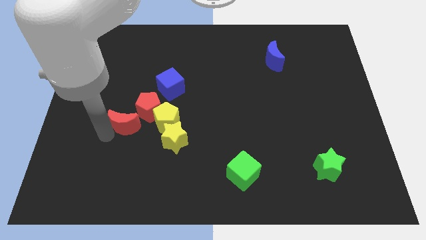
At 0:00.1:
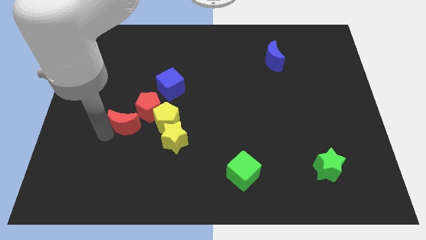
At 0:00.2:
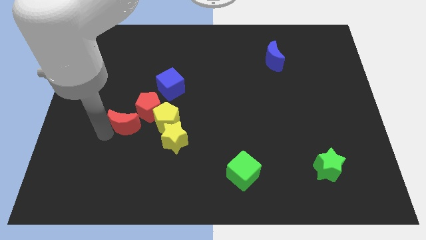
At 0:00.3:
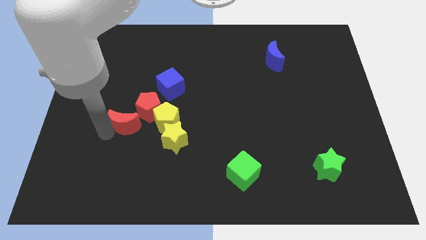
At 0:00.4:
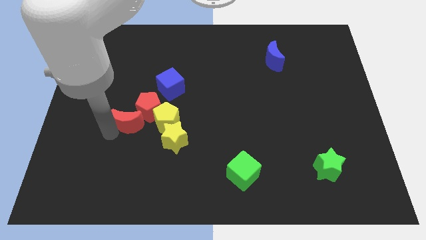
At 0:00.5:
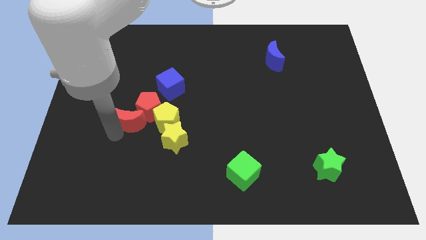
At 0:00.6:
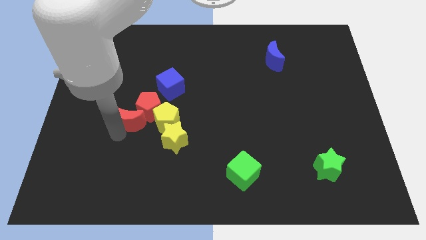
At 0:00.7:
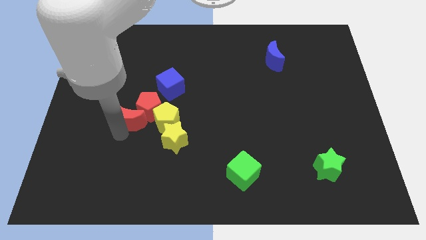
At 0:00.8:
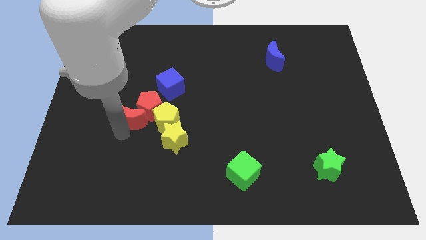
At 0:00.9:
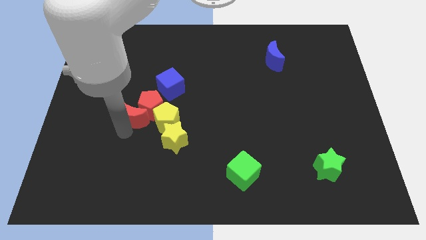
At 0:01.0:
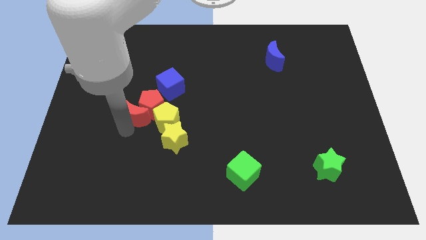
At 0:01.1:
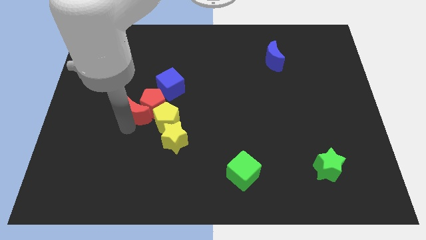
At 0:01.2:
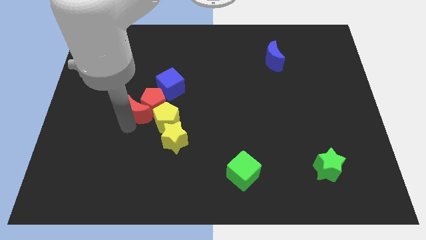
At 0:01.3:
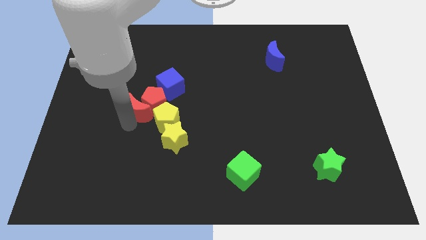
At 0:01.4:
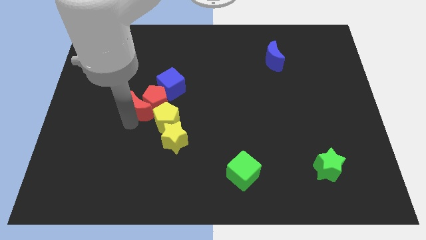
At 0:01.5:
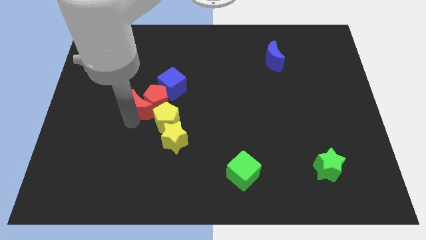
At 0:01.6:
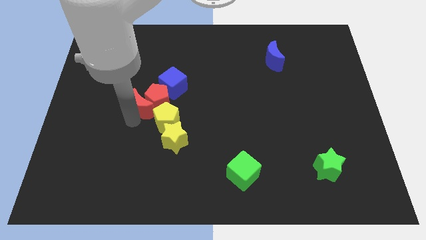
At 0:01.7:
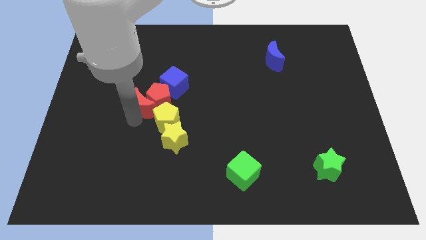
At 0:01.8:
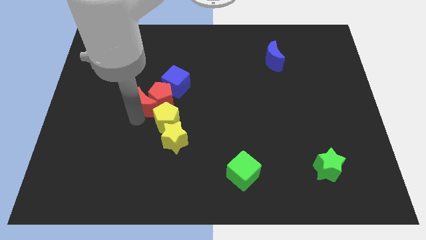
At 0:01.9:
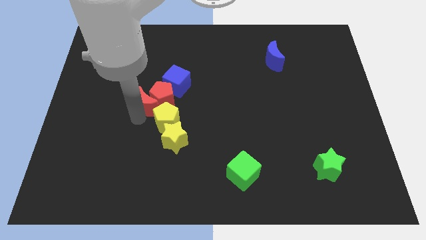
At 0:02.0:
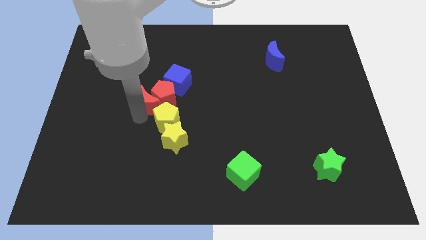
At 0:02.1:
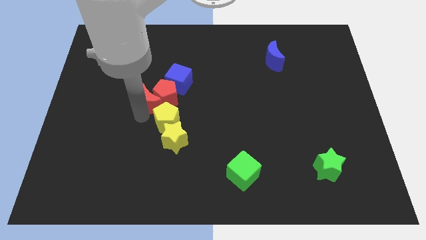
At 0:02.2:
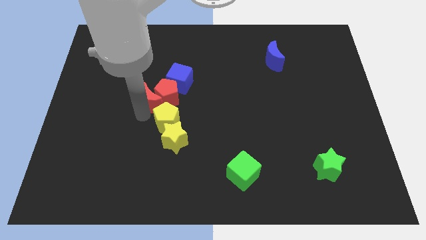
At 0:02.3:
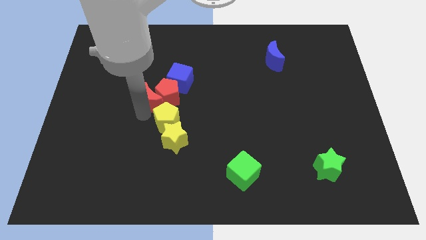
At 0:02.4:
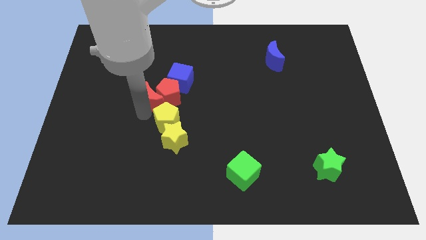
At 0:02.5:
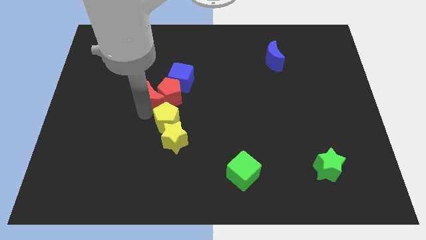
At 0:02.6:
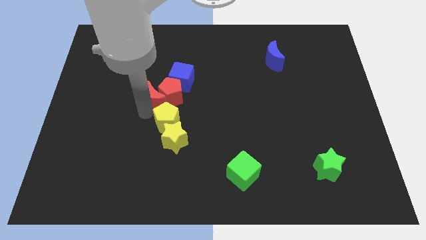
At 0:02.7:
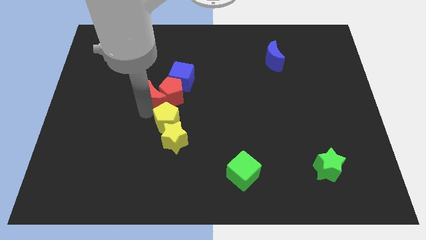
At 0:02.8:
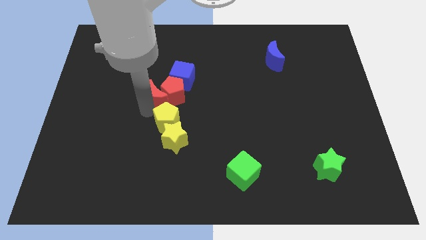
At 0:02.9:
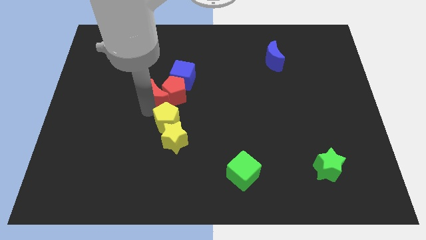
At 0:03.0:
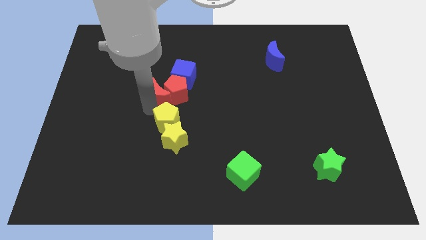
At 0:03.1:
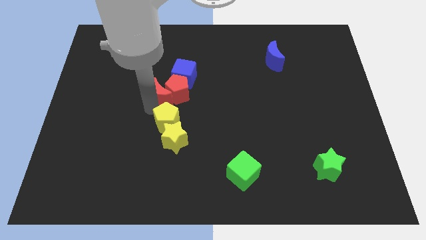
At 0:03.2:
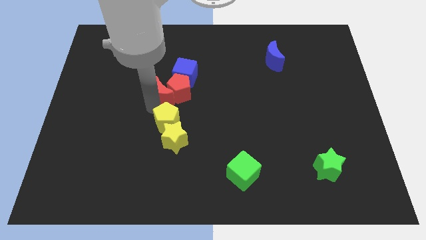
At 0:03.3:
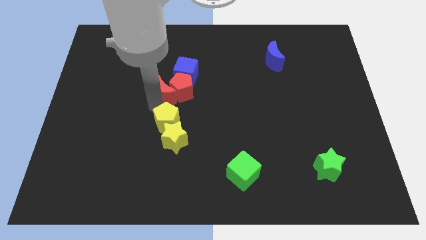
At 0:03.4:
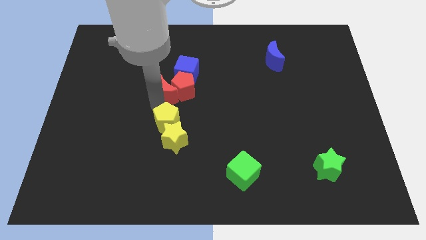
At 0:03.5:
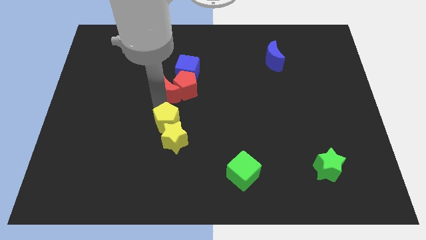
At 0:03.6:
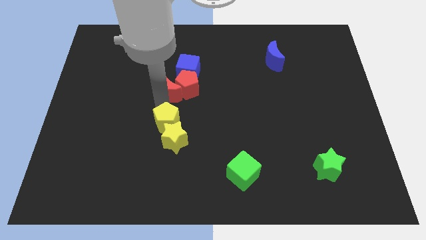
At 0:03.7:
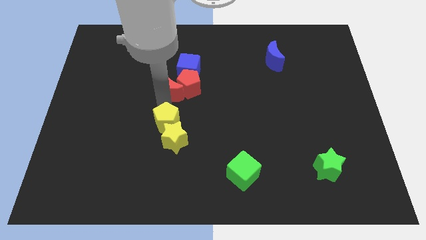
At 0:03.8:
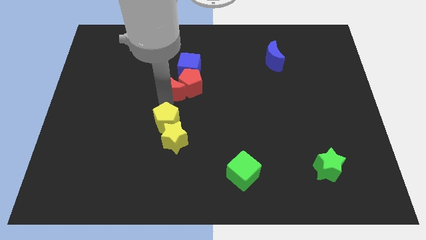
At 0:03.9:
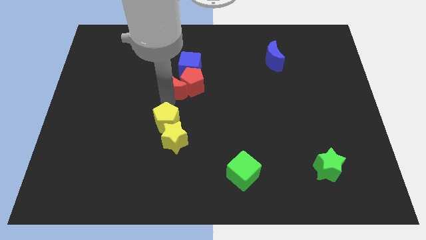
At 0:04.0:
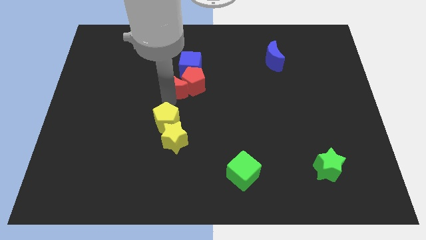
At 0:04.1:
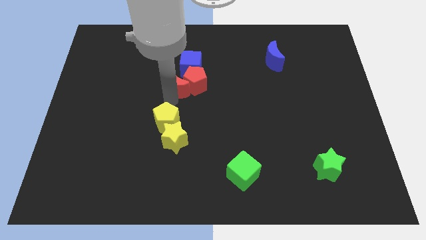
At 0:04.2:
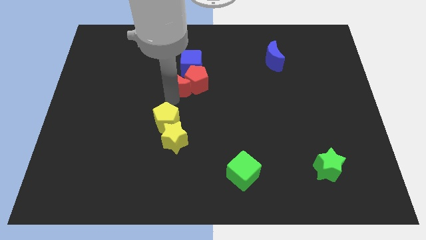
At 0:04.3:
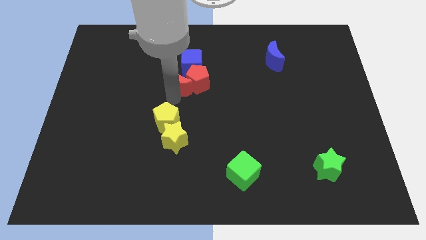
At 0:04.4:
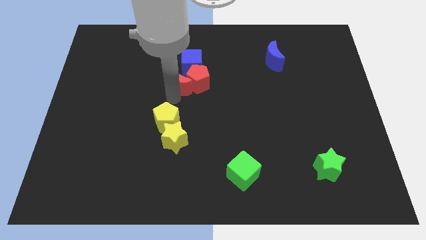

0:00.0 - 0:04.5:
slide the red blocks and blue block to the center of the board

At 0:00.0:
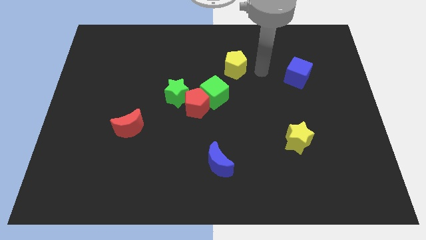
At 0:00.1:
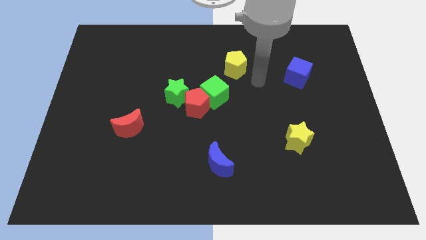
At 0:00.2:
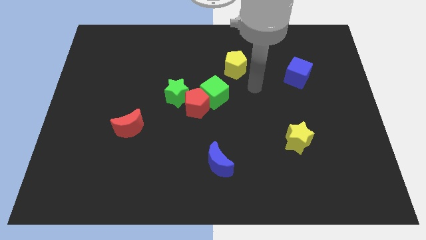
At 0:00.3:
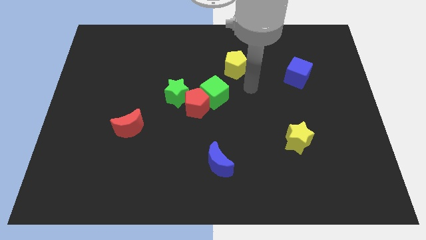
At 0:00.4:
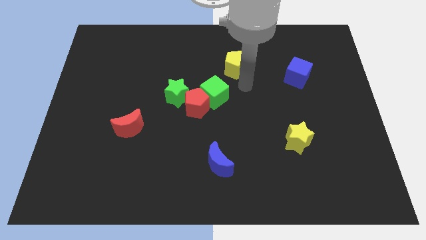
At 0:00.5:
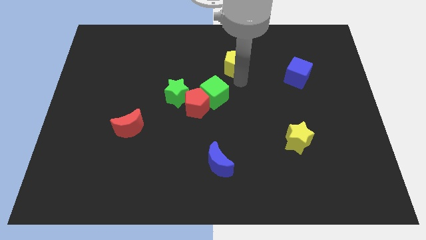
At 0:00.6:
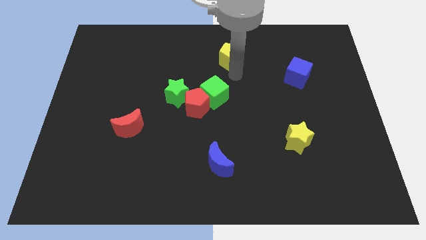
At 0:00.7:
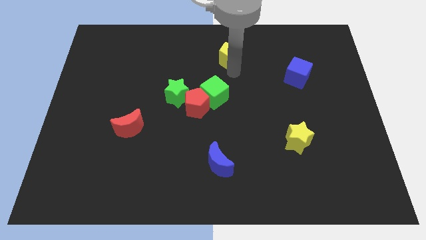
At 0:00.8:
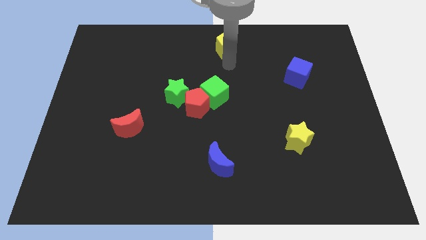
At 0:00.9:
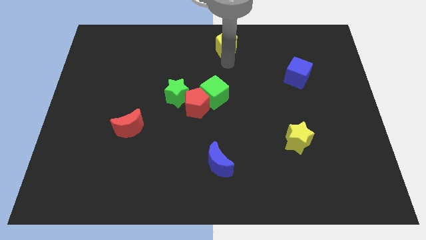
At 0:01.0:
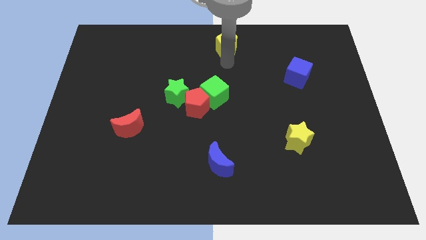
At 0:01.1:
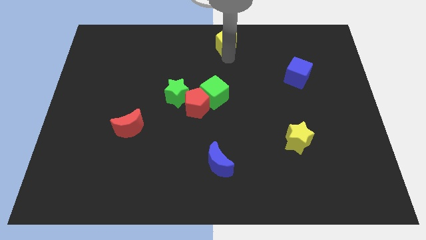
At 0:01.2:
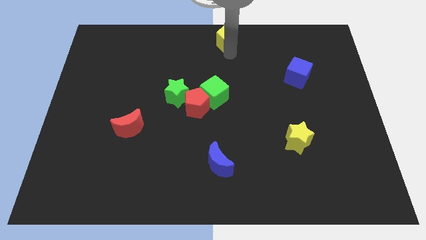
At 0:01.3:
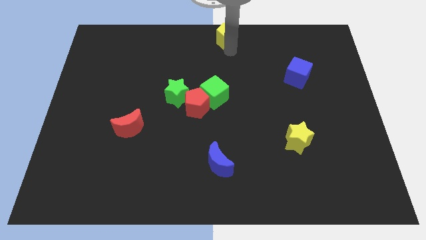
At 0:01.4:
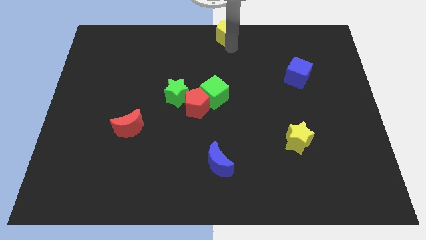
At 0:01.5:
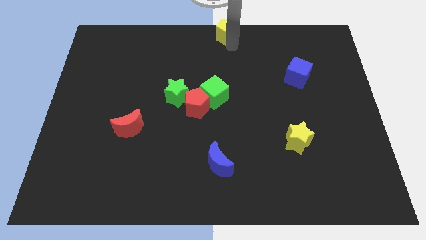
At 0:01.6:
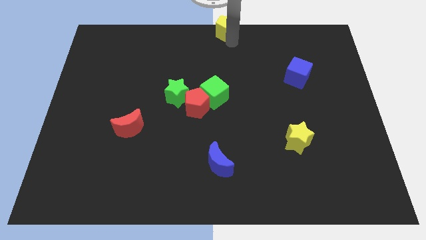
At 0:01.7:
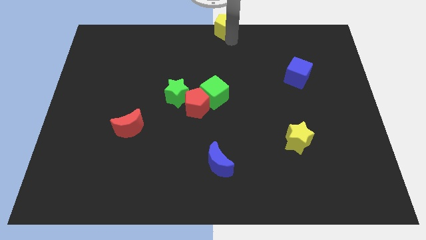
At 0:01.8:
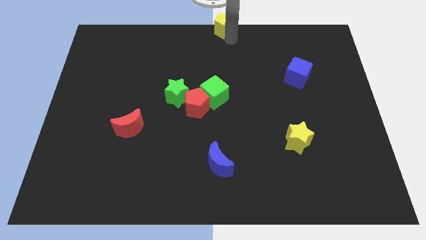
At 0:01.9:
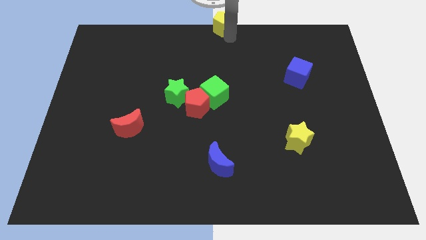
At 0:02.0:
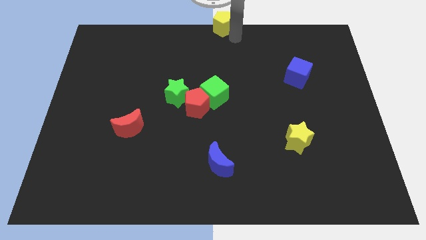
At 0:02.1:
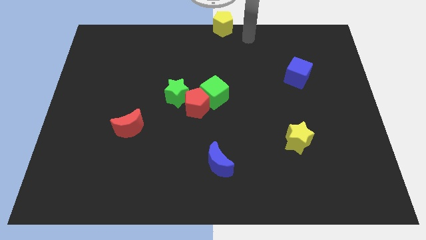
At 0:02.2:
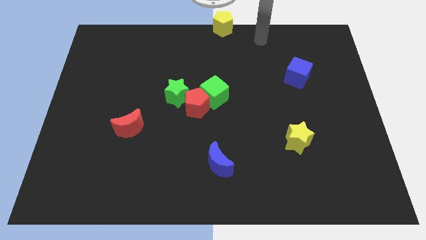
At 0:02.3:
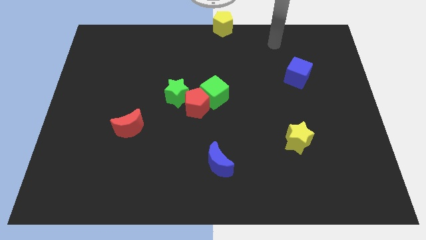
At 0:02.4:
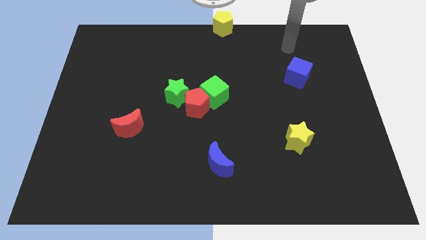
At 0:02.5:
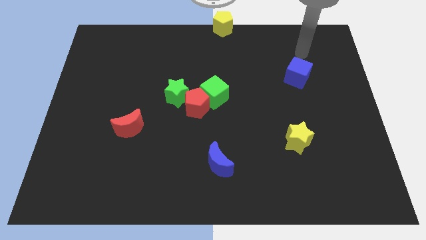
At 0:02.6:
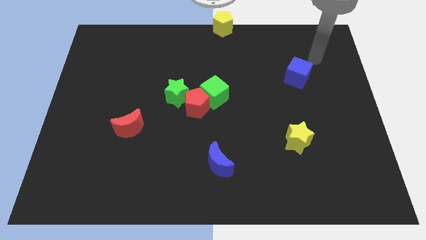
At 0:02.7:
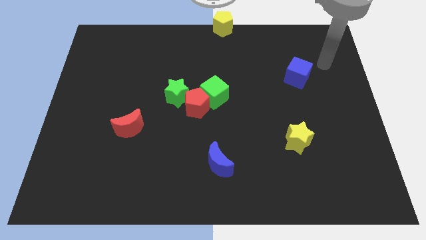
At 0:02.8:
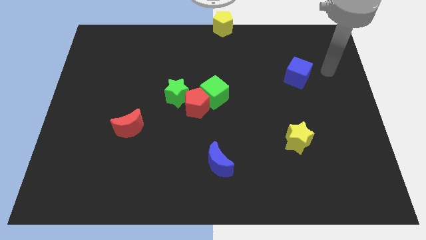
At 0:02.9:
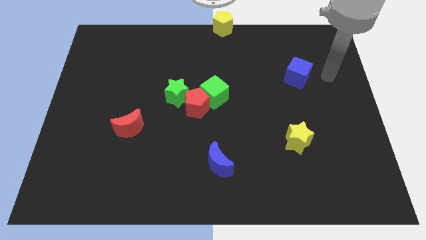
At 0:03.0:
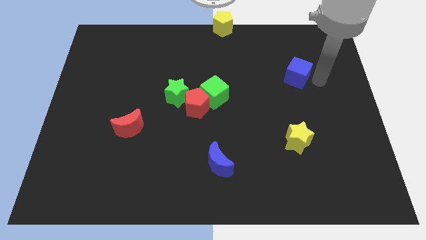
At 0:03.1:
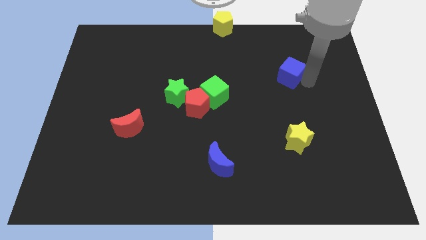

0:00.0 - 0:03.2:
place the yellow pentagon at the top center of the board

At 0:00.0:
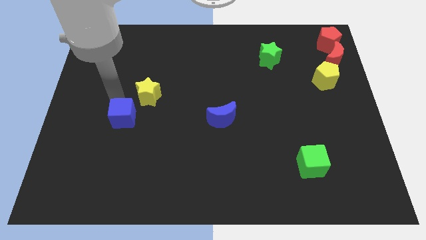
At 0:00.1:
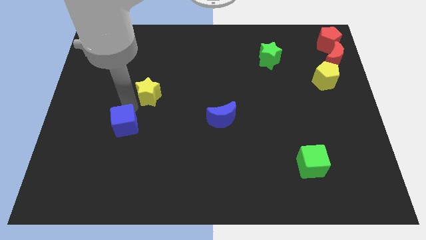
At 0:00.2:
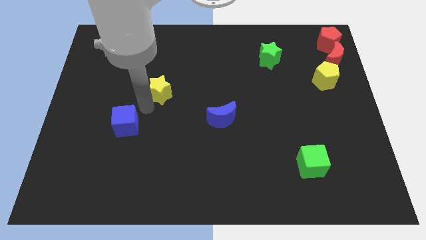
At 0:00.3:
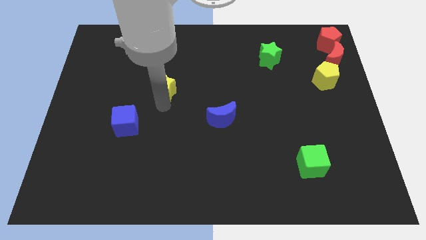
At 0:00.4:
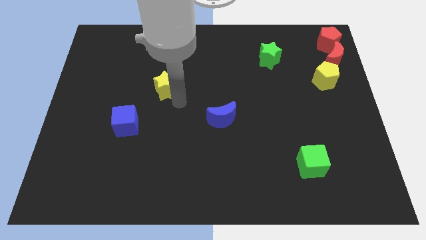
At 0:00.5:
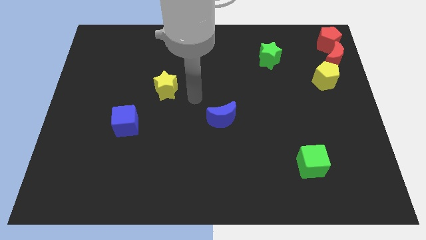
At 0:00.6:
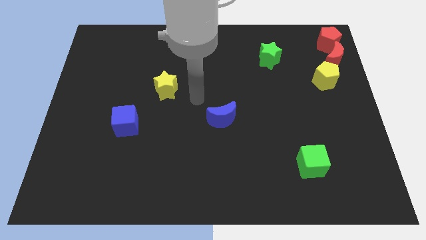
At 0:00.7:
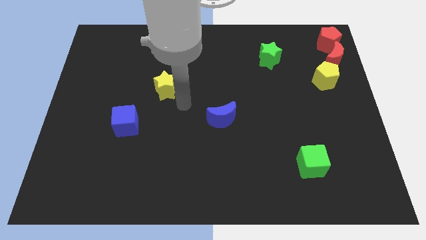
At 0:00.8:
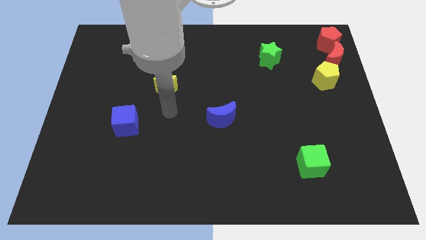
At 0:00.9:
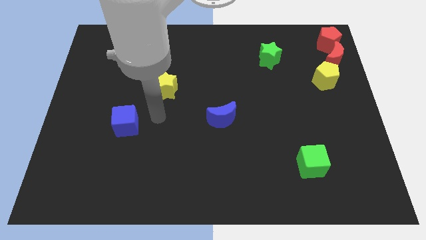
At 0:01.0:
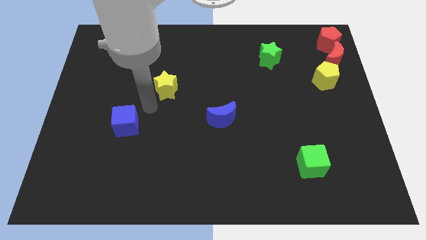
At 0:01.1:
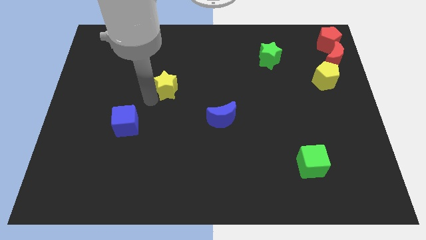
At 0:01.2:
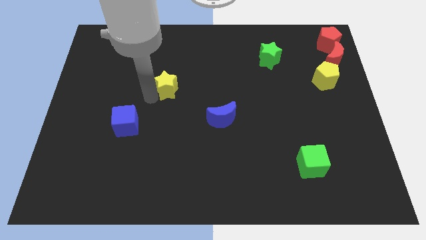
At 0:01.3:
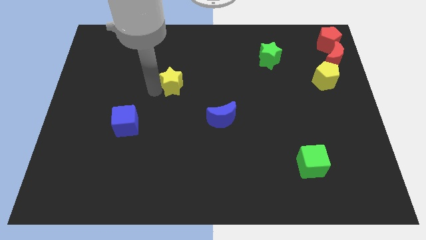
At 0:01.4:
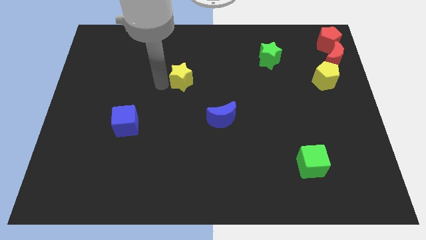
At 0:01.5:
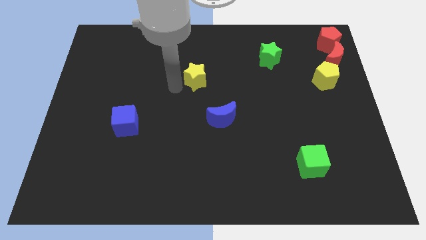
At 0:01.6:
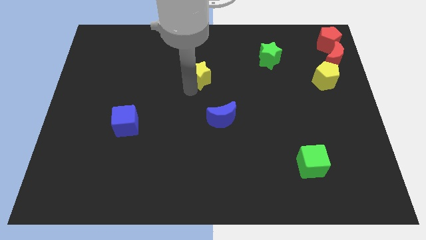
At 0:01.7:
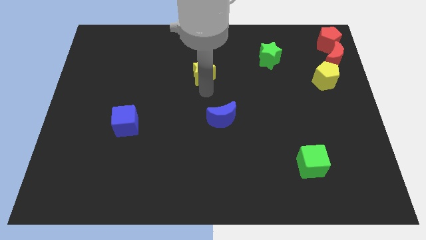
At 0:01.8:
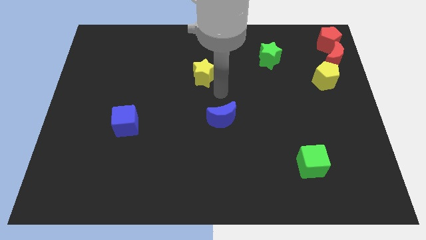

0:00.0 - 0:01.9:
place the yellow star on top of the blue moon
